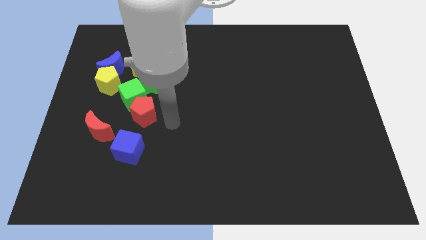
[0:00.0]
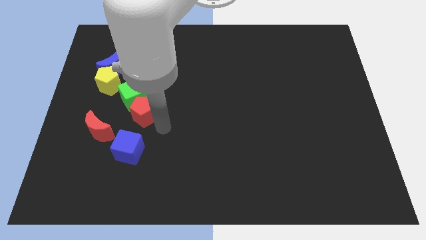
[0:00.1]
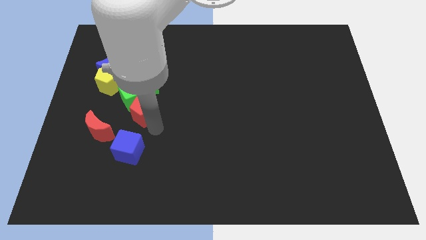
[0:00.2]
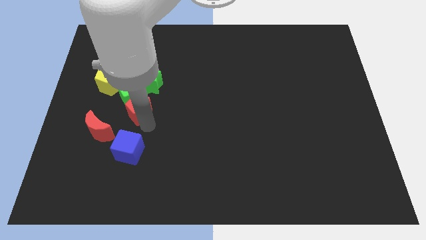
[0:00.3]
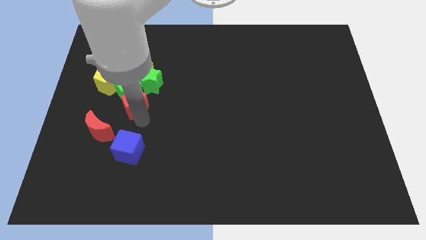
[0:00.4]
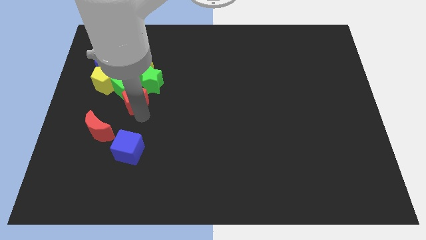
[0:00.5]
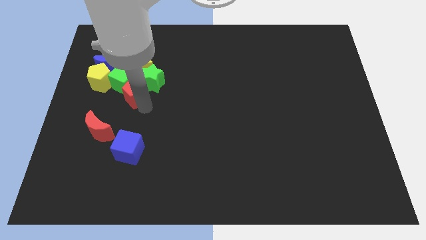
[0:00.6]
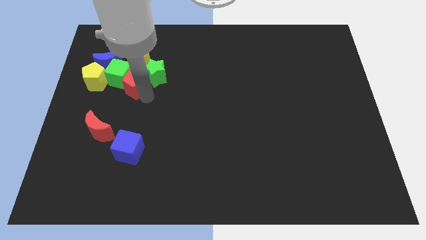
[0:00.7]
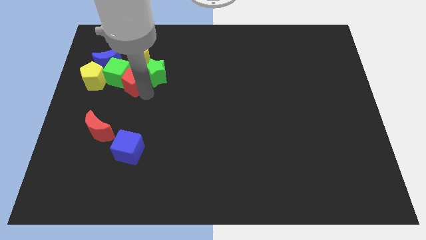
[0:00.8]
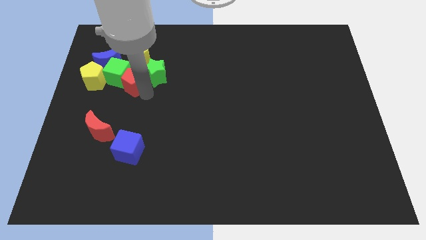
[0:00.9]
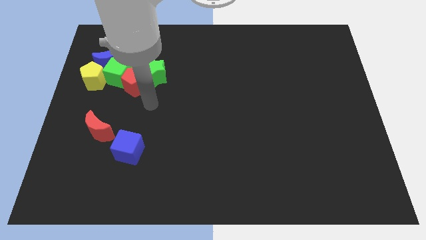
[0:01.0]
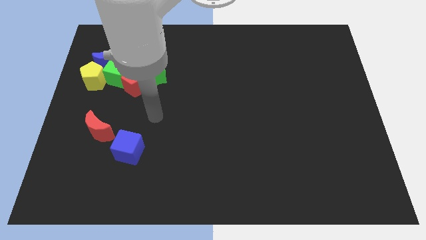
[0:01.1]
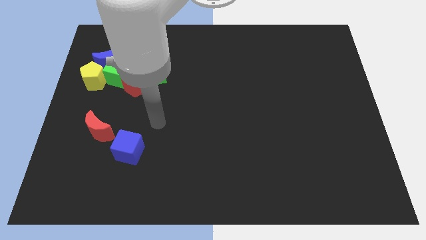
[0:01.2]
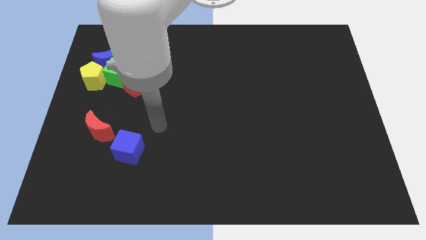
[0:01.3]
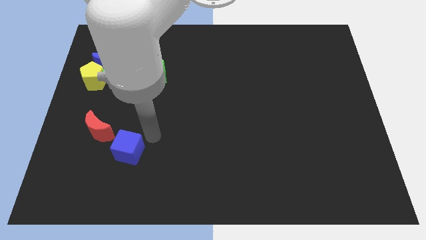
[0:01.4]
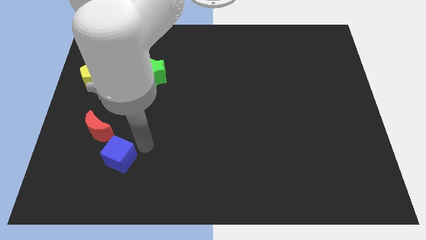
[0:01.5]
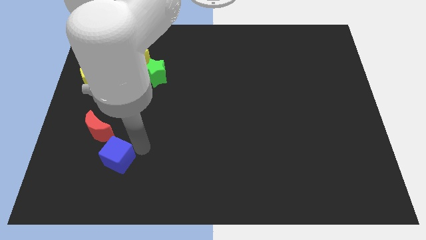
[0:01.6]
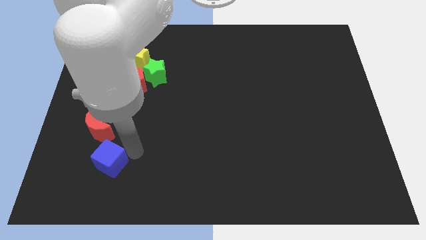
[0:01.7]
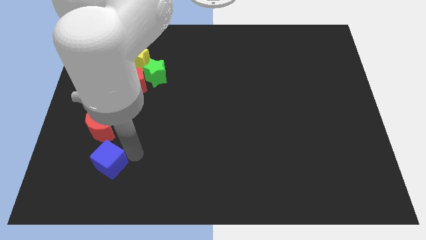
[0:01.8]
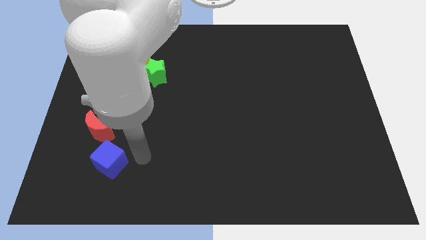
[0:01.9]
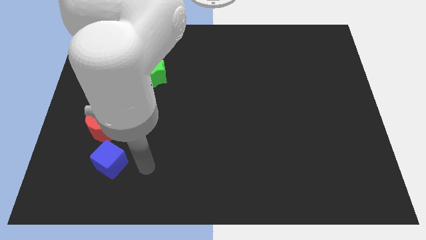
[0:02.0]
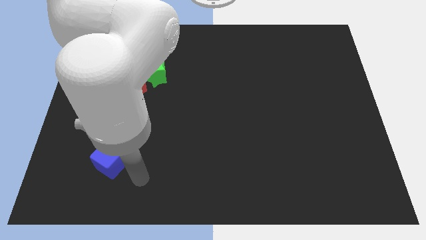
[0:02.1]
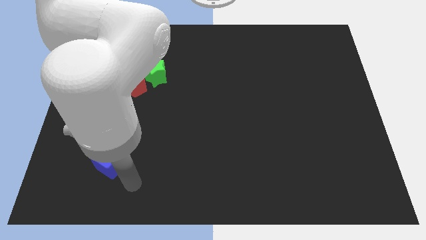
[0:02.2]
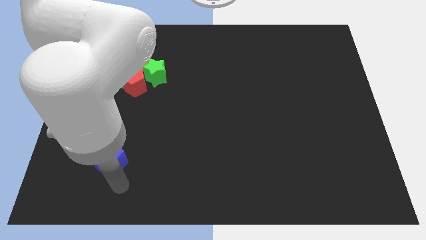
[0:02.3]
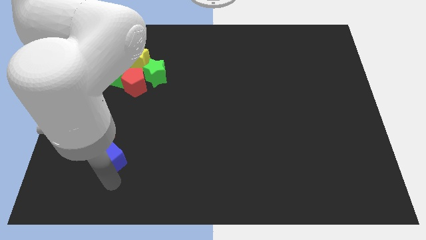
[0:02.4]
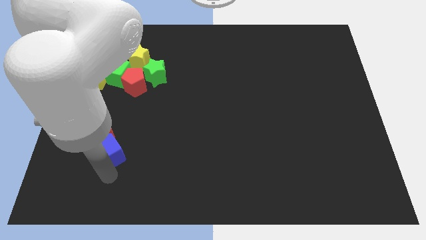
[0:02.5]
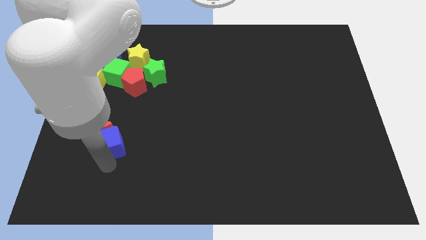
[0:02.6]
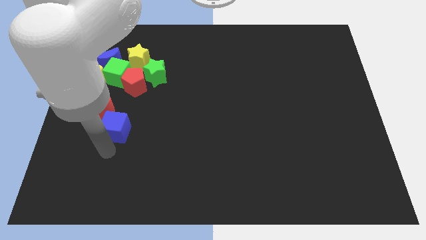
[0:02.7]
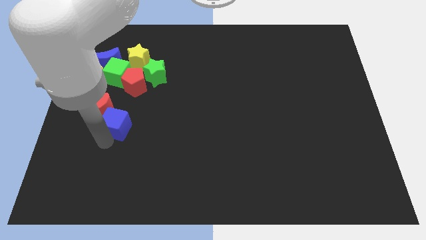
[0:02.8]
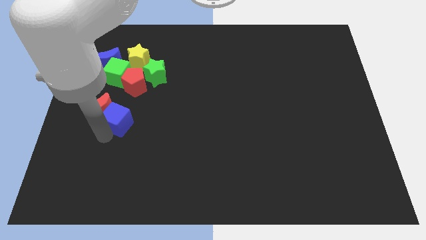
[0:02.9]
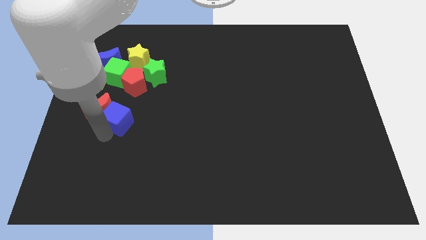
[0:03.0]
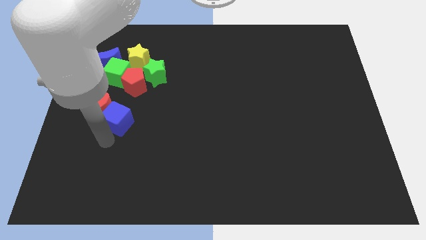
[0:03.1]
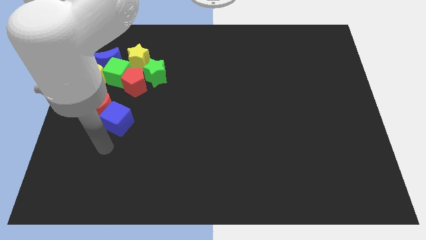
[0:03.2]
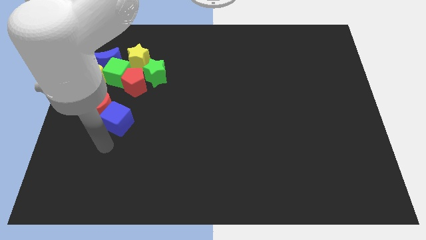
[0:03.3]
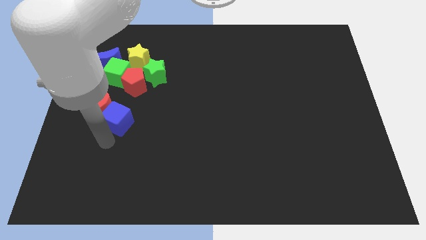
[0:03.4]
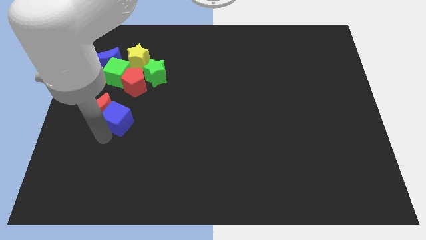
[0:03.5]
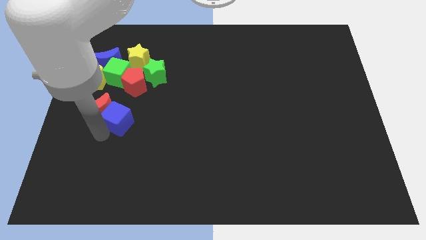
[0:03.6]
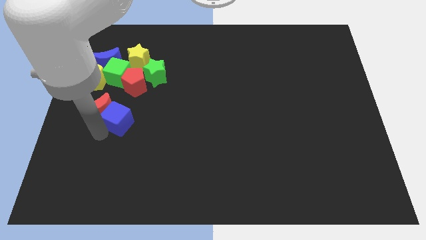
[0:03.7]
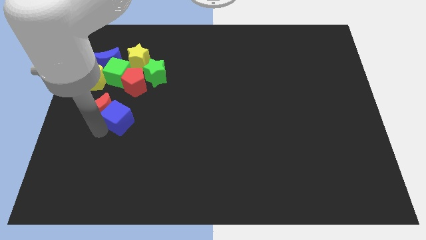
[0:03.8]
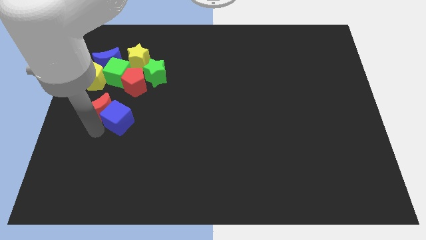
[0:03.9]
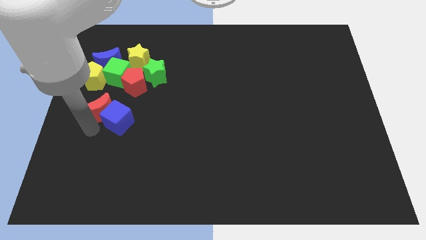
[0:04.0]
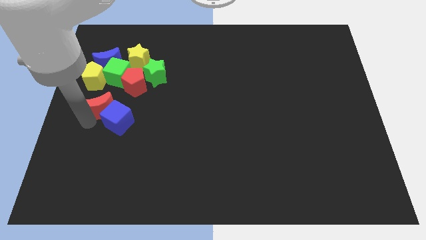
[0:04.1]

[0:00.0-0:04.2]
put the blue cube on the bottom side of the green cube

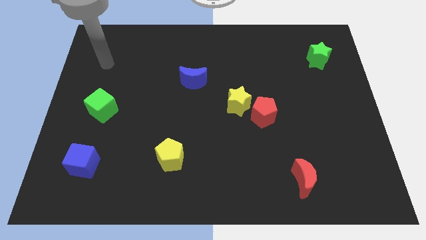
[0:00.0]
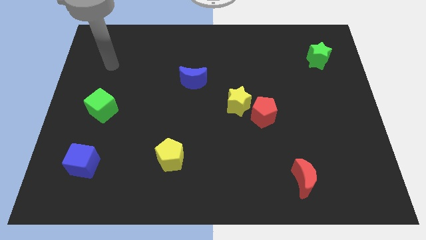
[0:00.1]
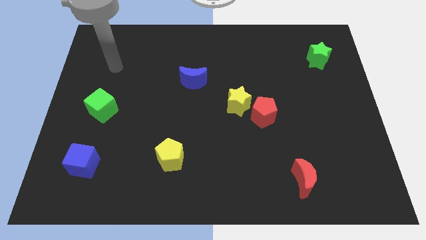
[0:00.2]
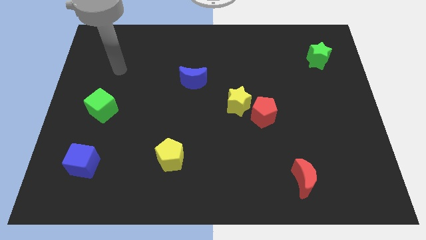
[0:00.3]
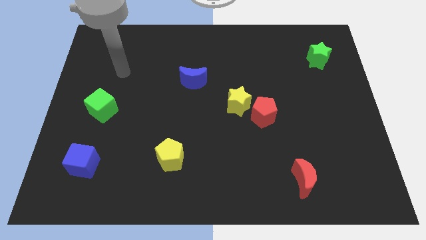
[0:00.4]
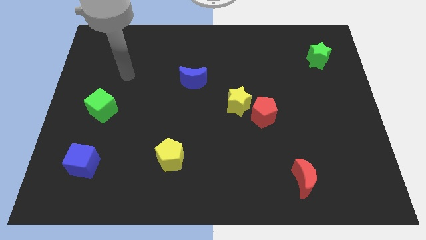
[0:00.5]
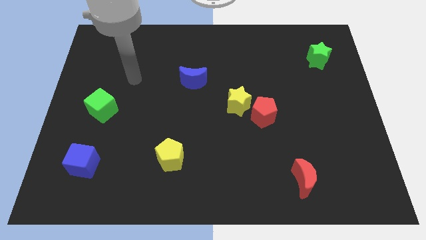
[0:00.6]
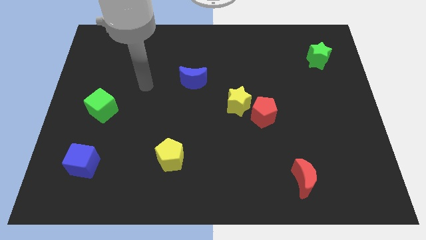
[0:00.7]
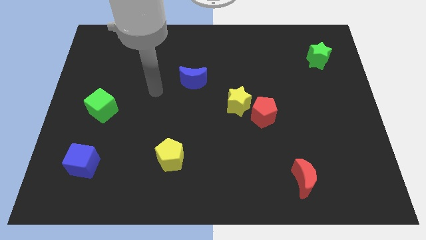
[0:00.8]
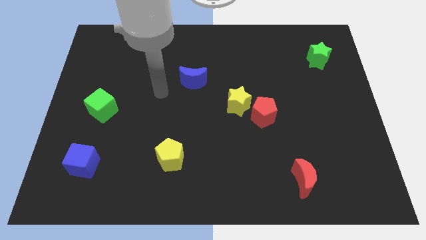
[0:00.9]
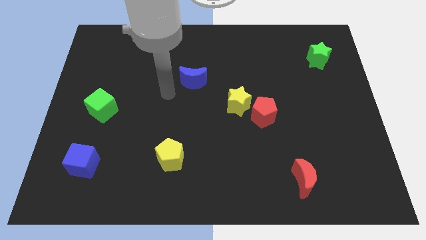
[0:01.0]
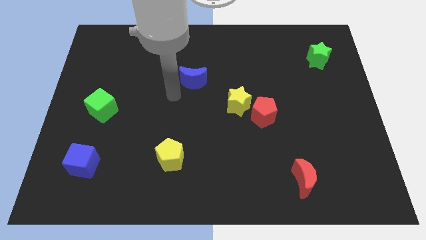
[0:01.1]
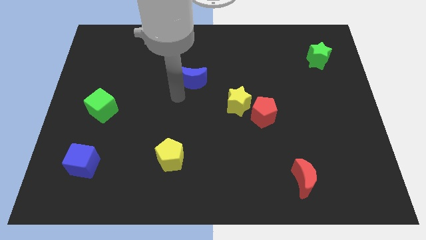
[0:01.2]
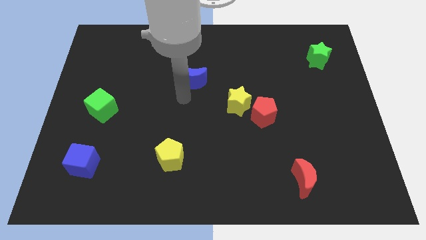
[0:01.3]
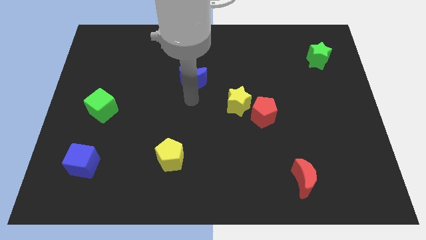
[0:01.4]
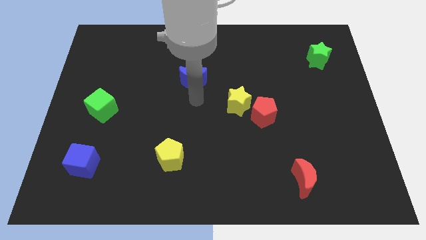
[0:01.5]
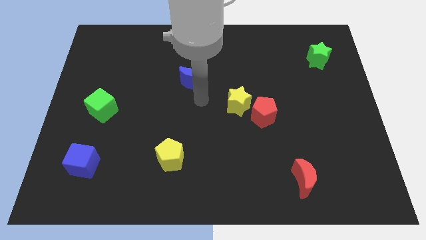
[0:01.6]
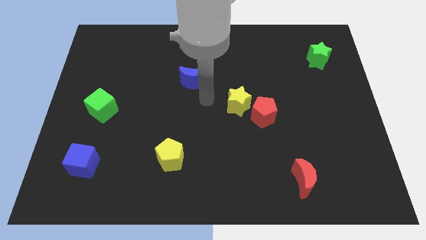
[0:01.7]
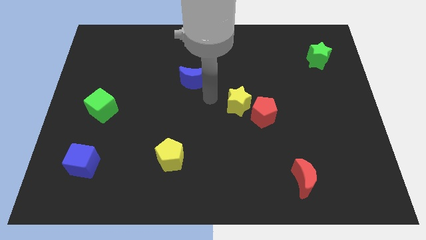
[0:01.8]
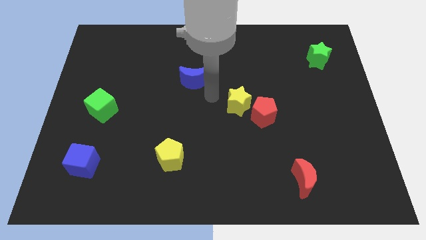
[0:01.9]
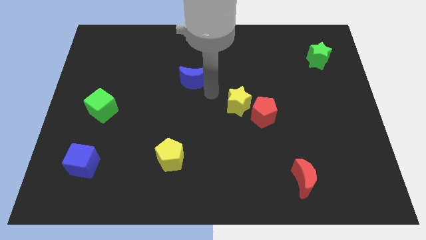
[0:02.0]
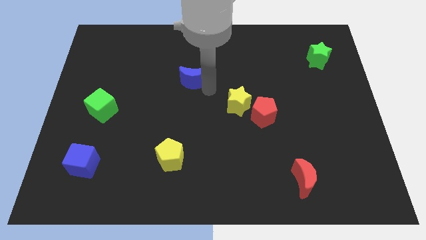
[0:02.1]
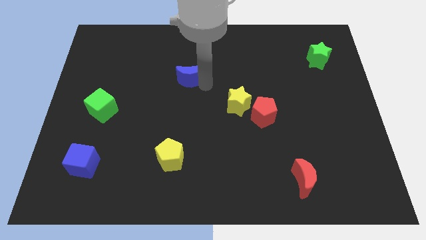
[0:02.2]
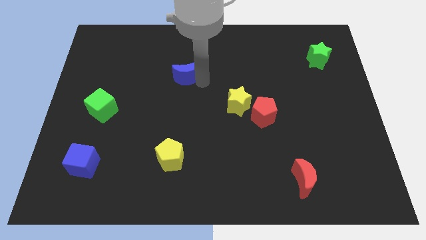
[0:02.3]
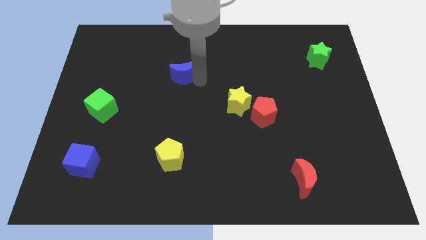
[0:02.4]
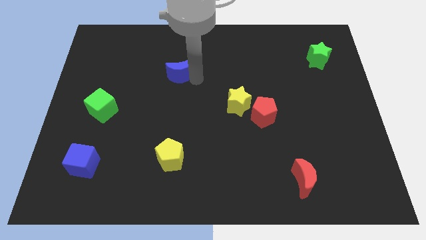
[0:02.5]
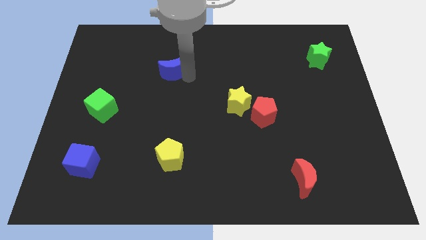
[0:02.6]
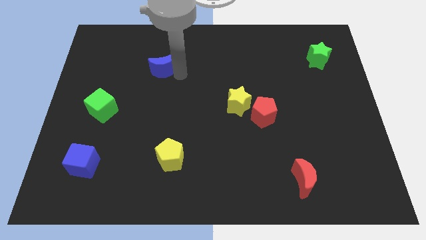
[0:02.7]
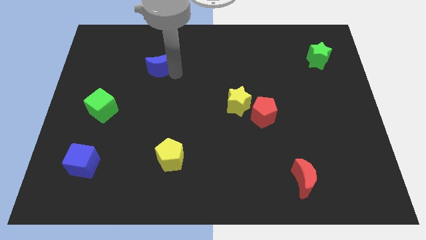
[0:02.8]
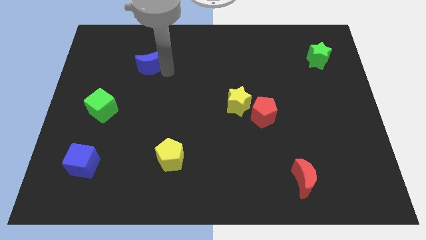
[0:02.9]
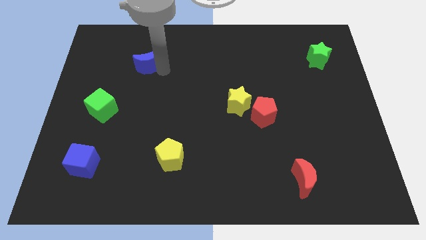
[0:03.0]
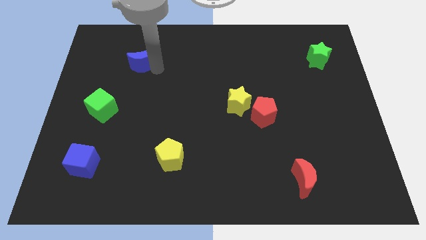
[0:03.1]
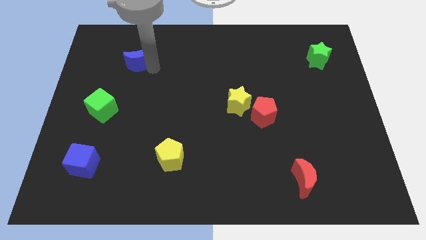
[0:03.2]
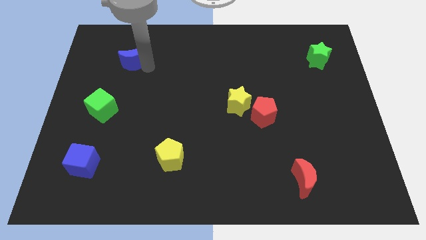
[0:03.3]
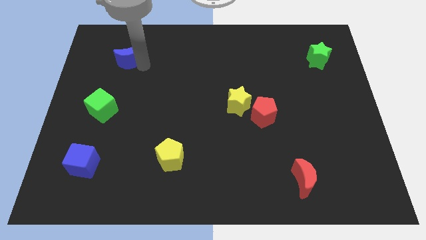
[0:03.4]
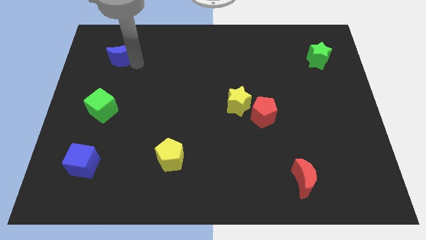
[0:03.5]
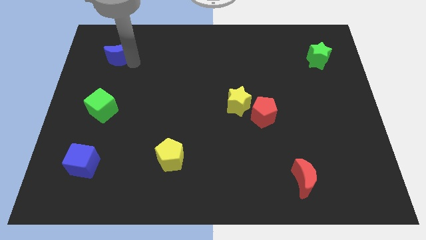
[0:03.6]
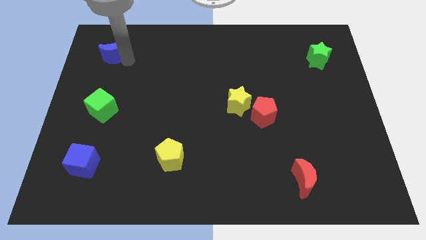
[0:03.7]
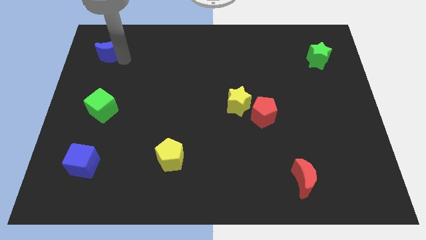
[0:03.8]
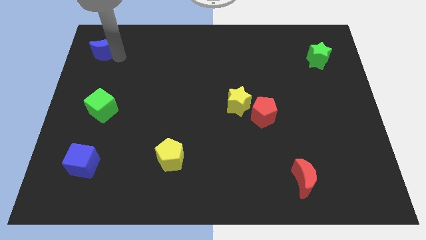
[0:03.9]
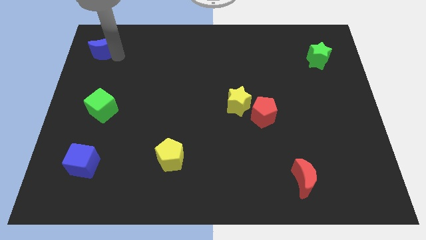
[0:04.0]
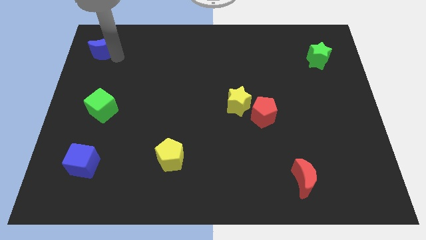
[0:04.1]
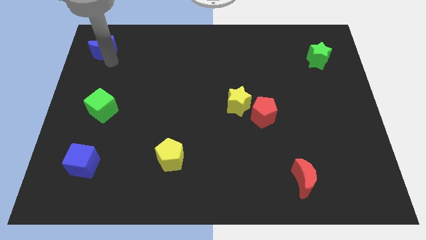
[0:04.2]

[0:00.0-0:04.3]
place blue moon to the top left corner of the board

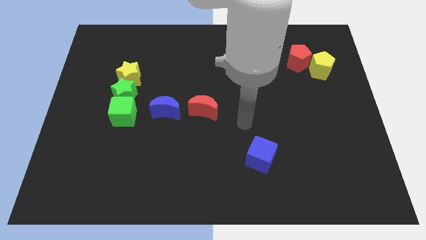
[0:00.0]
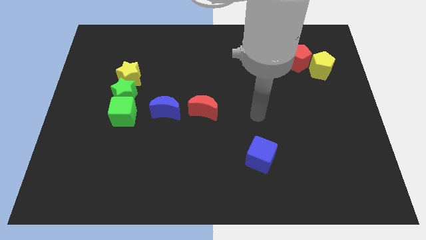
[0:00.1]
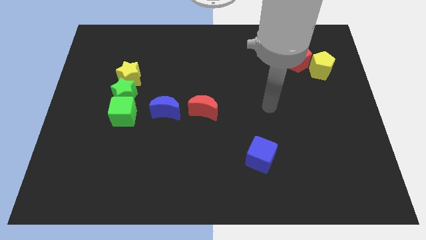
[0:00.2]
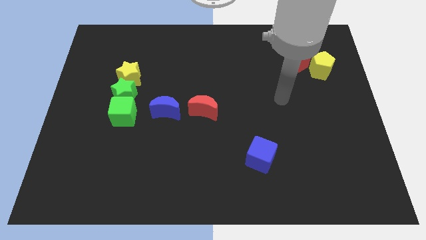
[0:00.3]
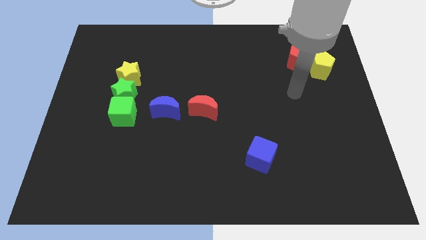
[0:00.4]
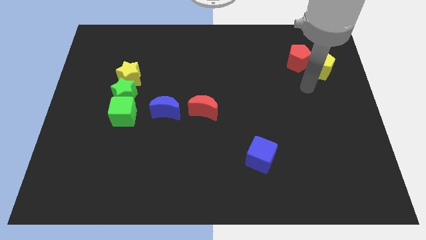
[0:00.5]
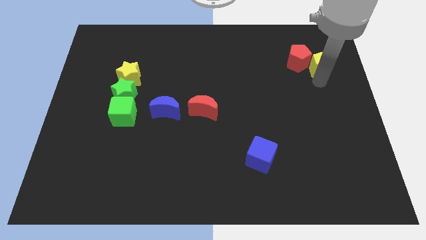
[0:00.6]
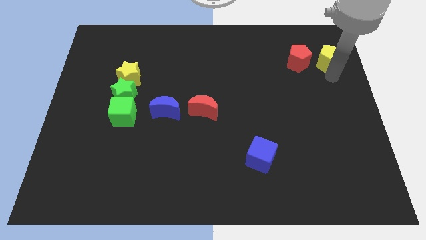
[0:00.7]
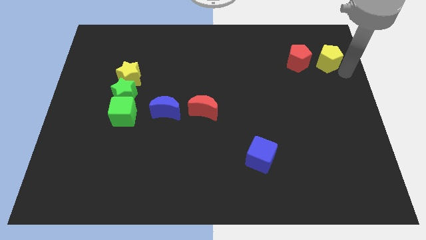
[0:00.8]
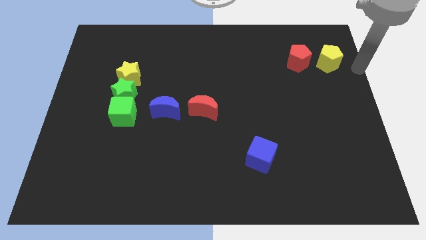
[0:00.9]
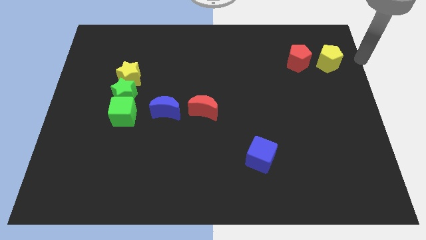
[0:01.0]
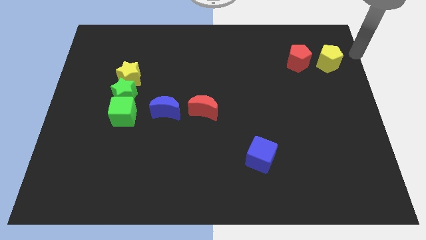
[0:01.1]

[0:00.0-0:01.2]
move the yellow pentagon right to the red pentagon
